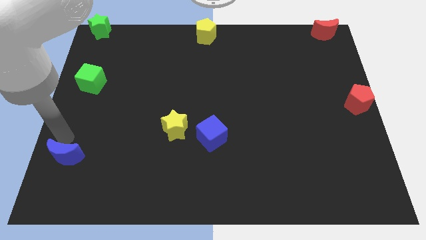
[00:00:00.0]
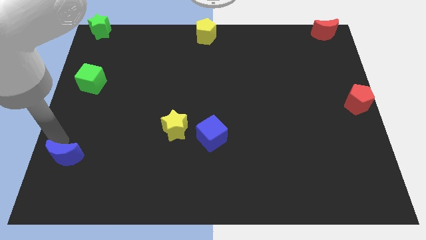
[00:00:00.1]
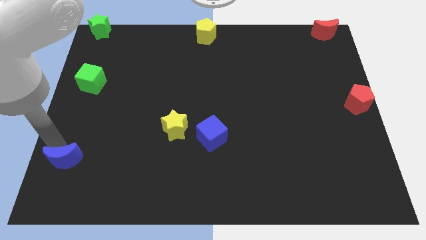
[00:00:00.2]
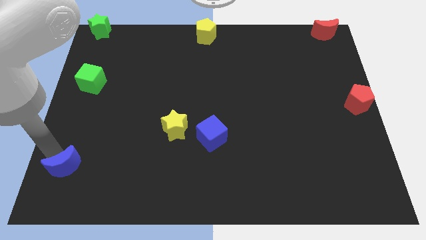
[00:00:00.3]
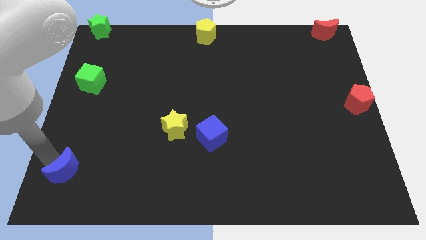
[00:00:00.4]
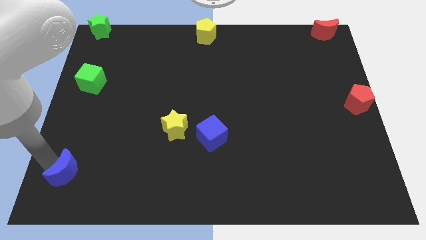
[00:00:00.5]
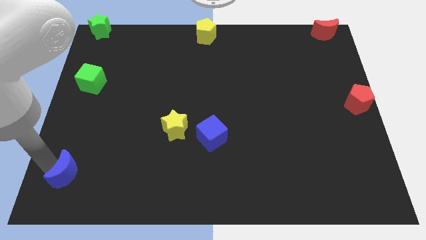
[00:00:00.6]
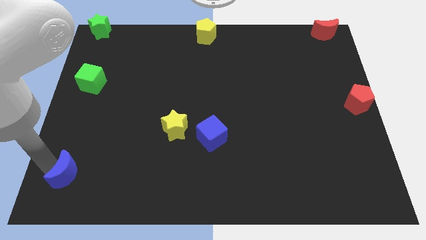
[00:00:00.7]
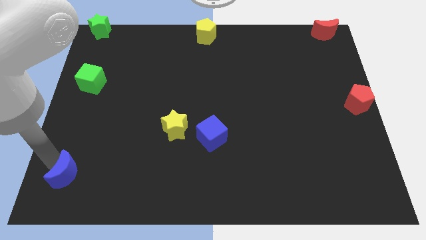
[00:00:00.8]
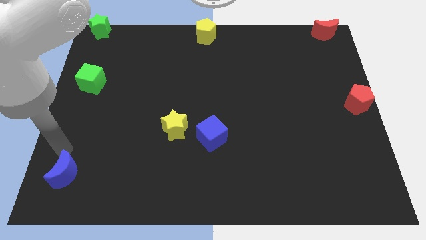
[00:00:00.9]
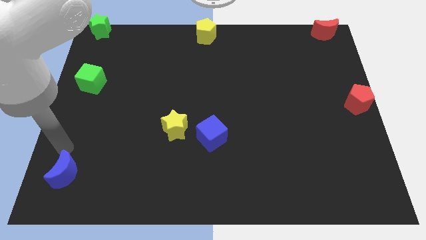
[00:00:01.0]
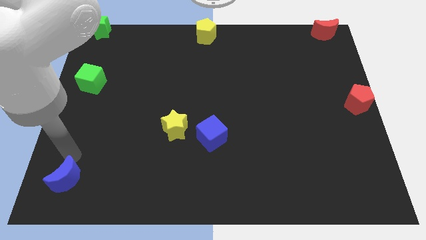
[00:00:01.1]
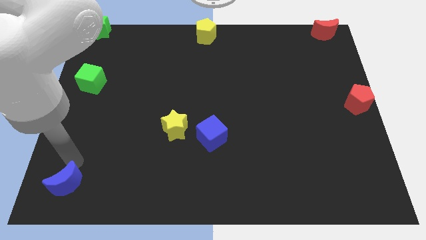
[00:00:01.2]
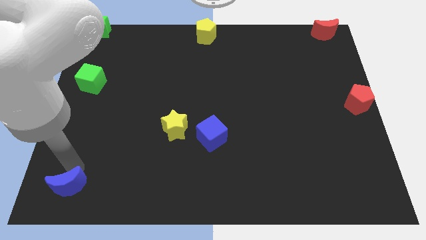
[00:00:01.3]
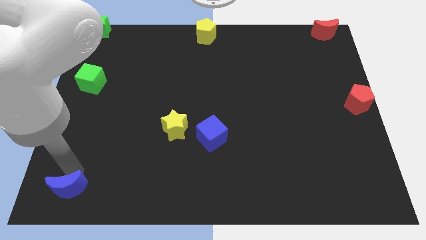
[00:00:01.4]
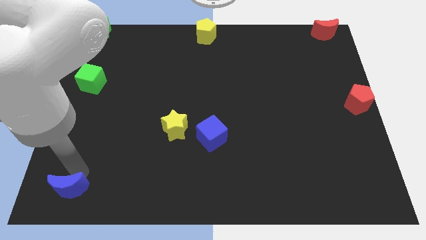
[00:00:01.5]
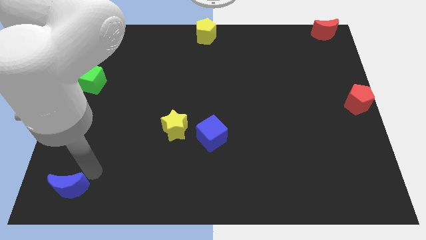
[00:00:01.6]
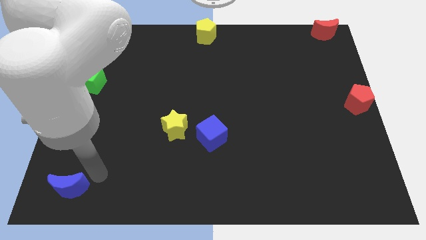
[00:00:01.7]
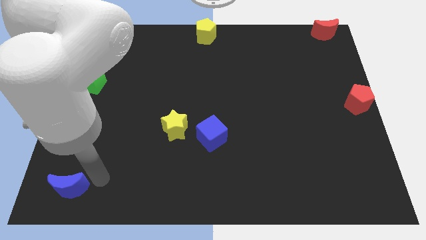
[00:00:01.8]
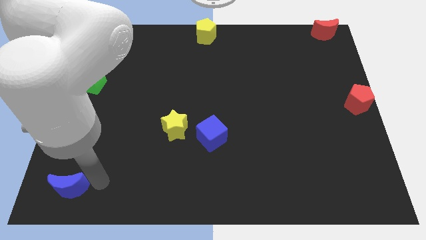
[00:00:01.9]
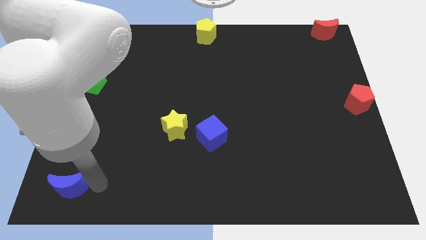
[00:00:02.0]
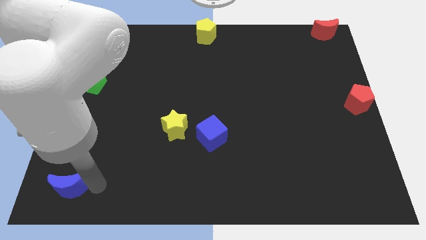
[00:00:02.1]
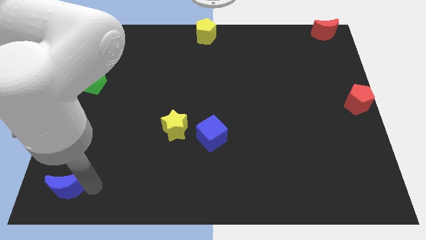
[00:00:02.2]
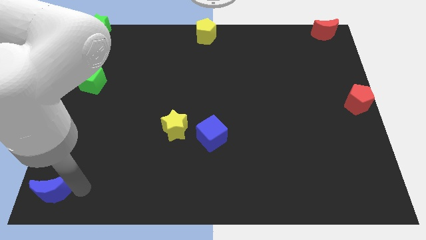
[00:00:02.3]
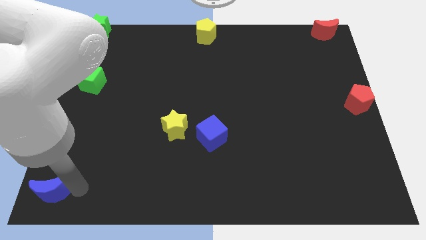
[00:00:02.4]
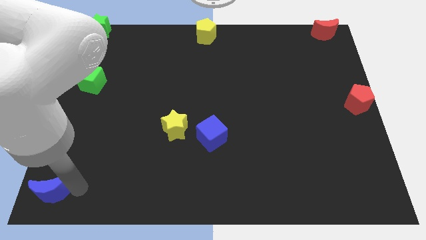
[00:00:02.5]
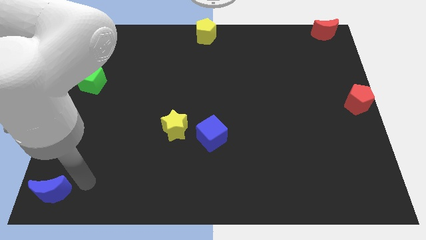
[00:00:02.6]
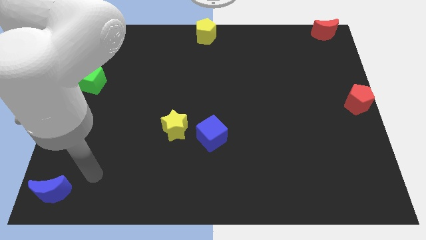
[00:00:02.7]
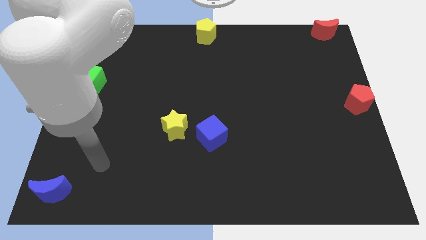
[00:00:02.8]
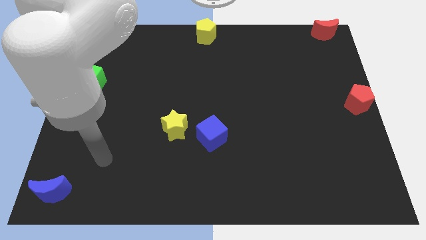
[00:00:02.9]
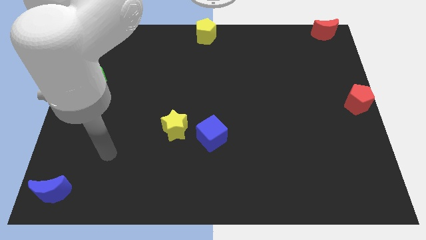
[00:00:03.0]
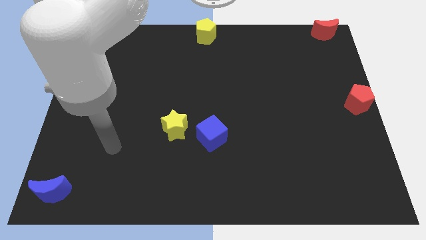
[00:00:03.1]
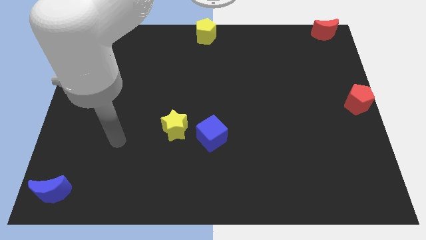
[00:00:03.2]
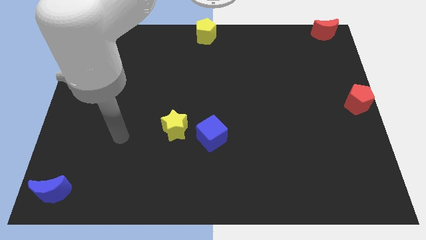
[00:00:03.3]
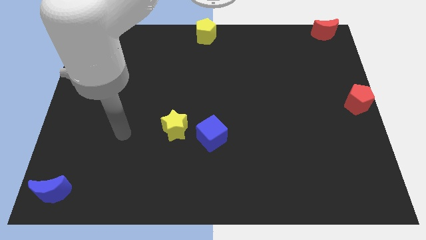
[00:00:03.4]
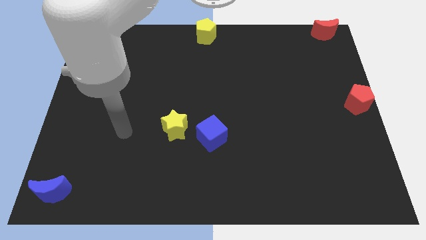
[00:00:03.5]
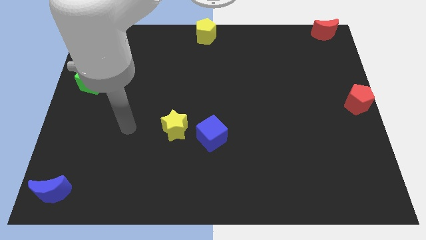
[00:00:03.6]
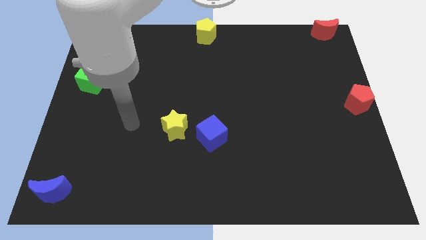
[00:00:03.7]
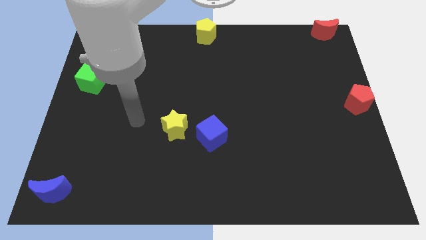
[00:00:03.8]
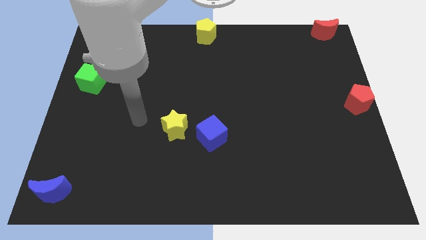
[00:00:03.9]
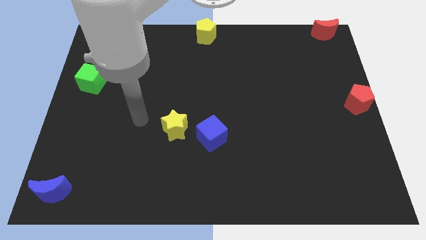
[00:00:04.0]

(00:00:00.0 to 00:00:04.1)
place the blue crescent towards the left bottom corner of the board

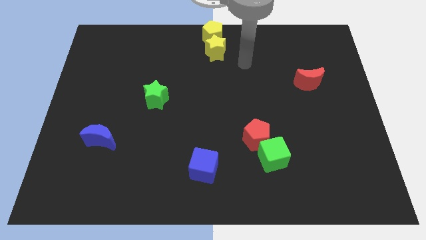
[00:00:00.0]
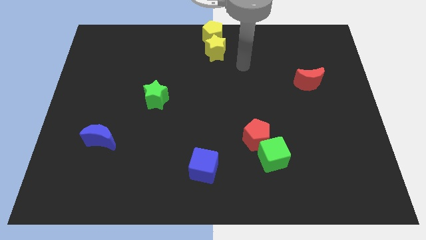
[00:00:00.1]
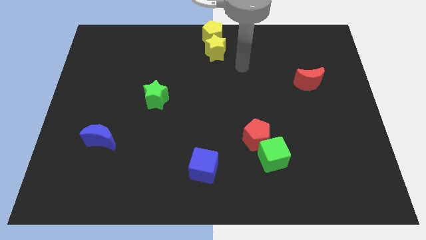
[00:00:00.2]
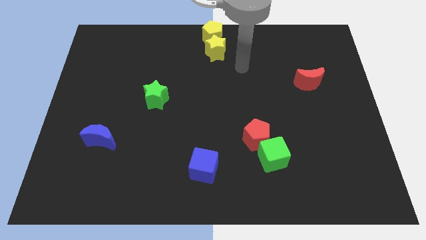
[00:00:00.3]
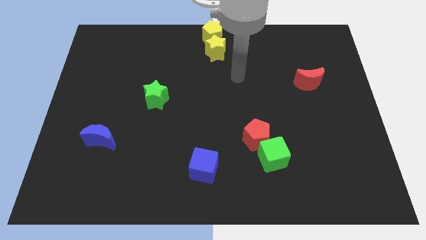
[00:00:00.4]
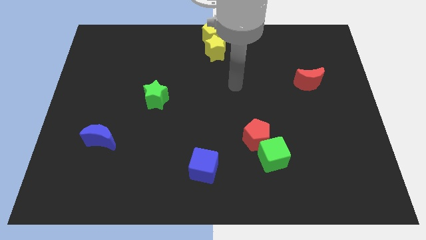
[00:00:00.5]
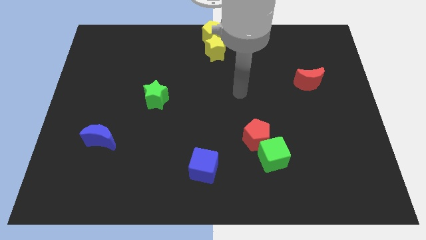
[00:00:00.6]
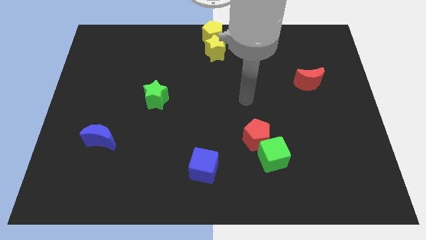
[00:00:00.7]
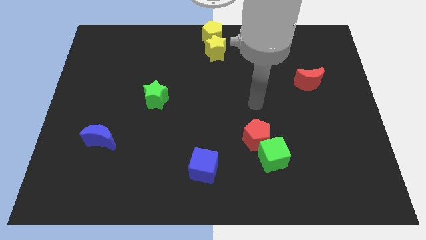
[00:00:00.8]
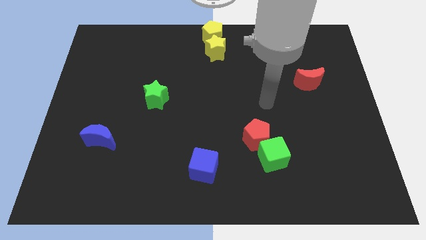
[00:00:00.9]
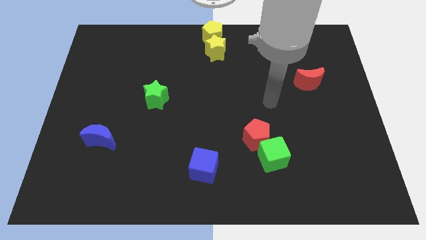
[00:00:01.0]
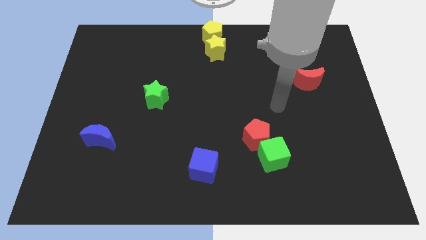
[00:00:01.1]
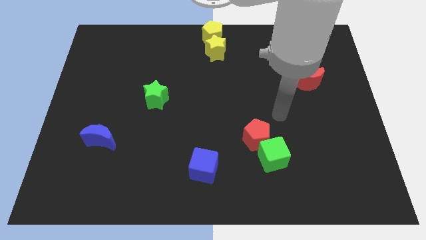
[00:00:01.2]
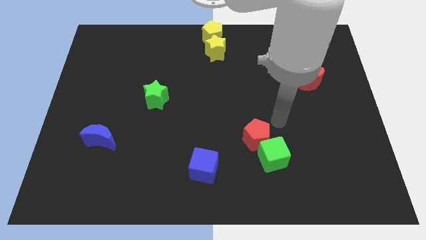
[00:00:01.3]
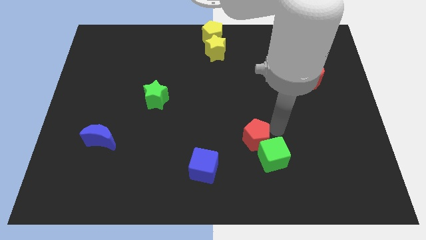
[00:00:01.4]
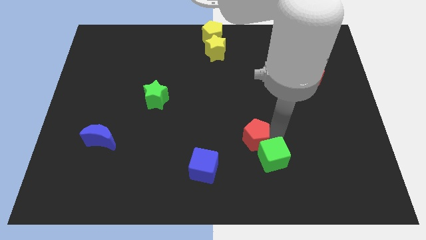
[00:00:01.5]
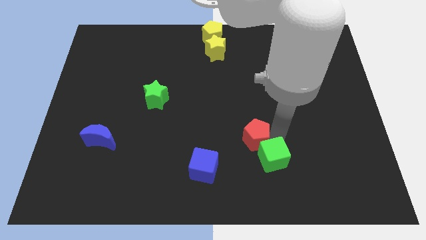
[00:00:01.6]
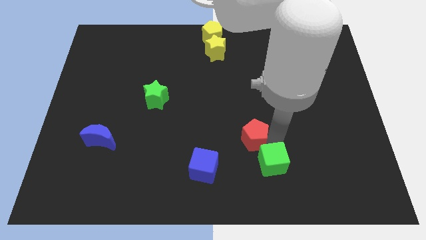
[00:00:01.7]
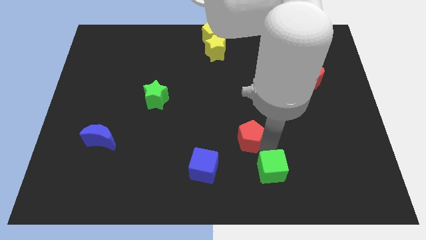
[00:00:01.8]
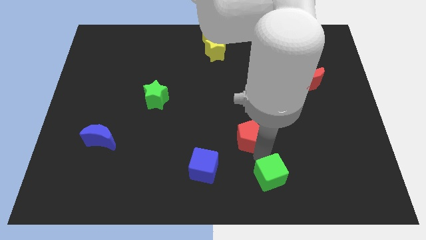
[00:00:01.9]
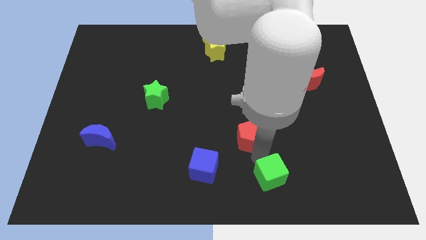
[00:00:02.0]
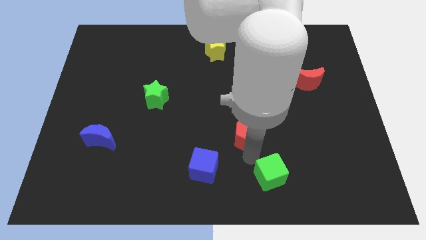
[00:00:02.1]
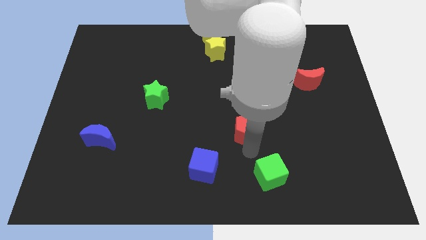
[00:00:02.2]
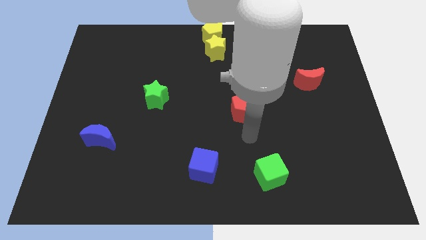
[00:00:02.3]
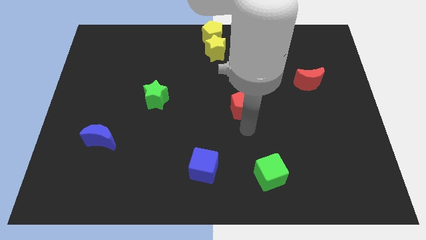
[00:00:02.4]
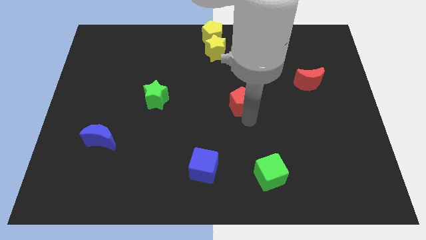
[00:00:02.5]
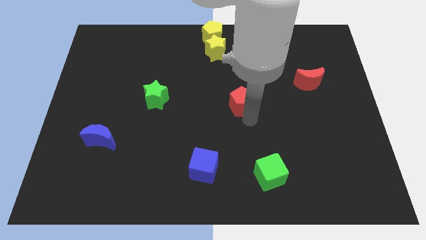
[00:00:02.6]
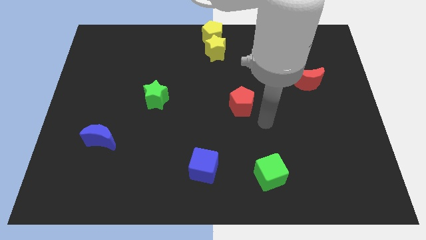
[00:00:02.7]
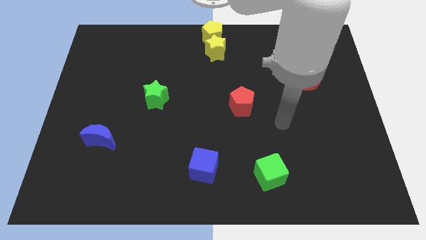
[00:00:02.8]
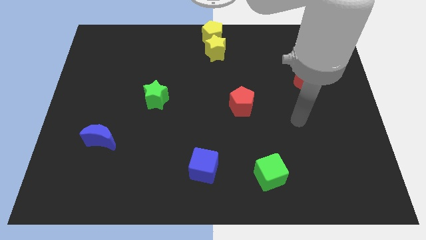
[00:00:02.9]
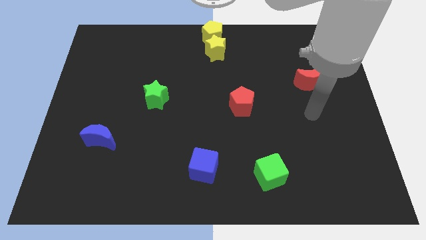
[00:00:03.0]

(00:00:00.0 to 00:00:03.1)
place the red pentagon towards the center of the board

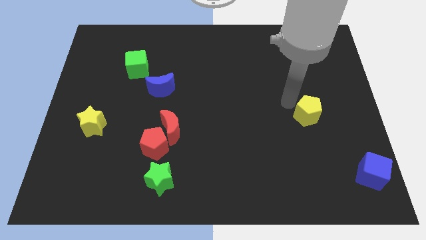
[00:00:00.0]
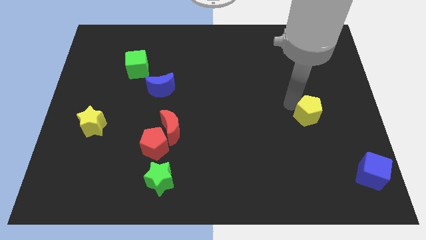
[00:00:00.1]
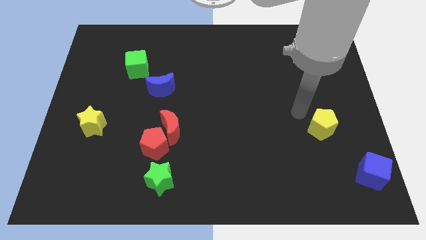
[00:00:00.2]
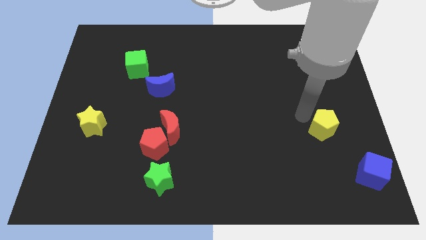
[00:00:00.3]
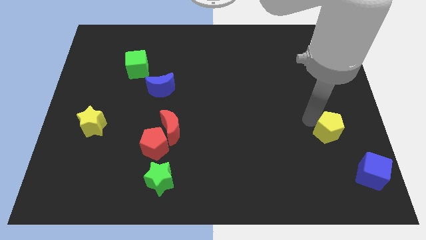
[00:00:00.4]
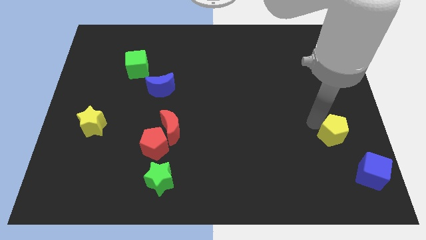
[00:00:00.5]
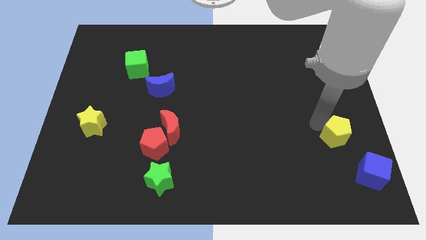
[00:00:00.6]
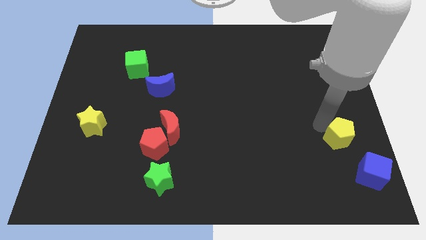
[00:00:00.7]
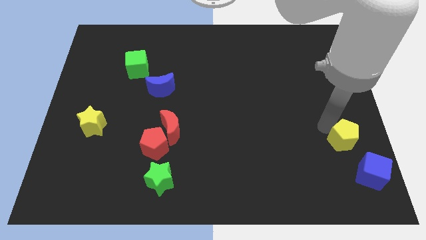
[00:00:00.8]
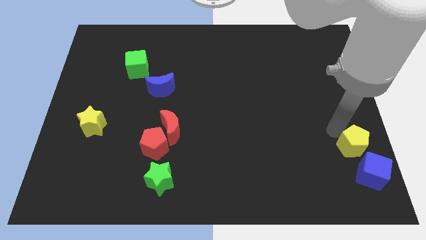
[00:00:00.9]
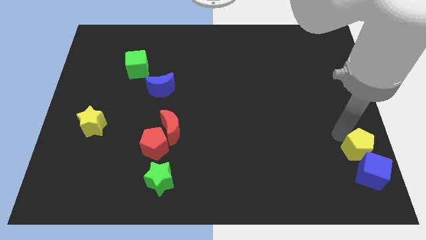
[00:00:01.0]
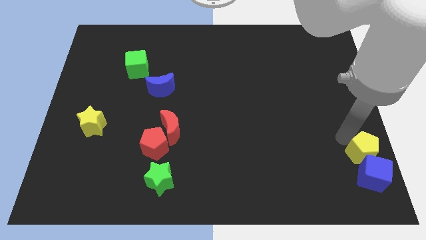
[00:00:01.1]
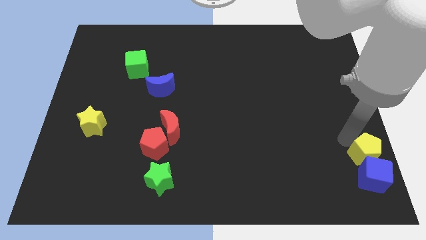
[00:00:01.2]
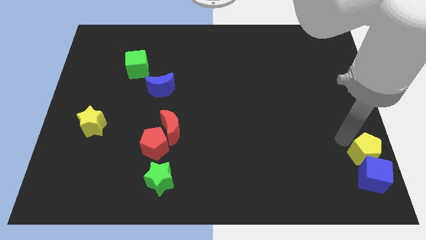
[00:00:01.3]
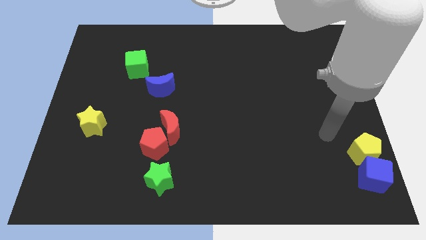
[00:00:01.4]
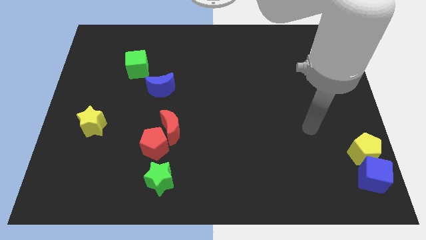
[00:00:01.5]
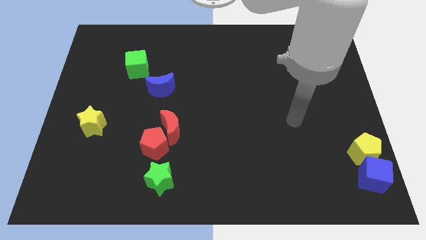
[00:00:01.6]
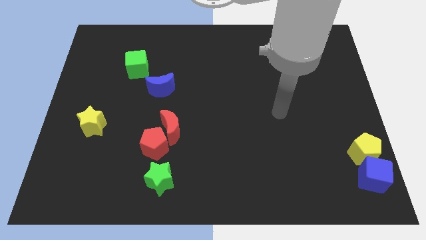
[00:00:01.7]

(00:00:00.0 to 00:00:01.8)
place yellow pentagon above the blue cube
